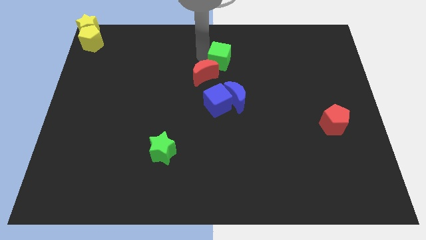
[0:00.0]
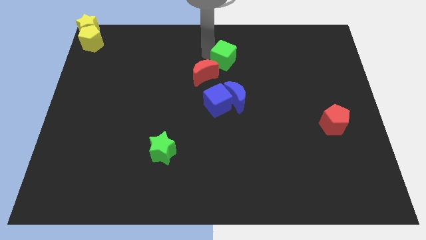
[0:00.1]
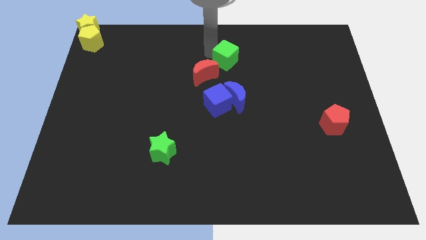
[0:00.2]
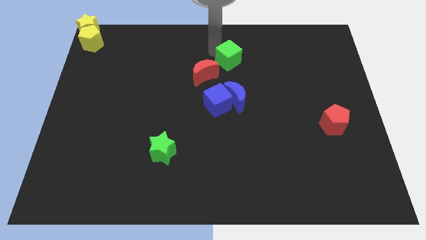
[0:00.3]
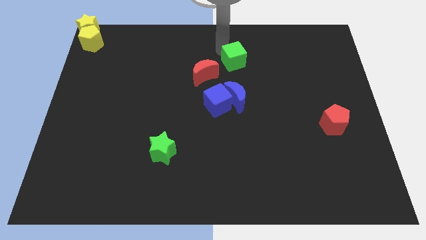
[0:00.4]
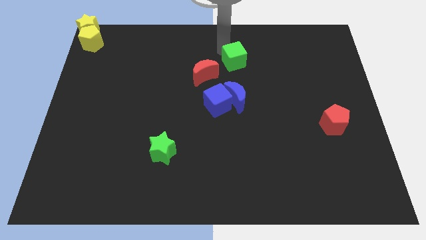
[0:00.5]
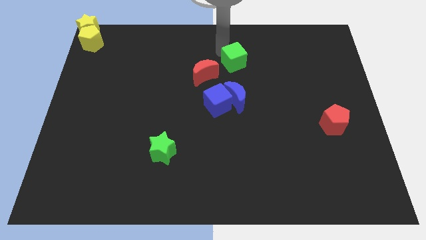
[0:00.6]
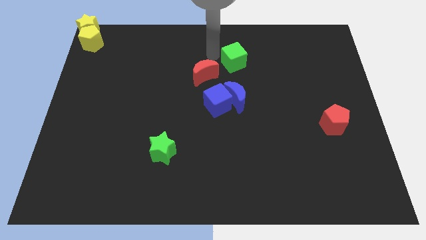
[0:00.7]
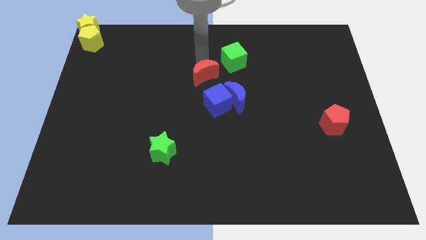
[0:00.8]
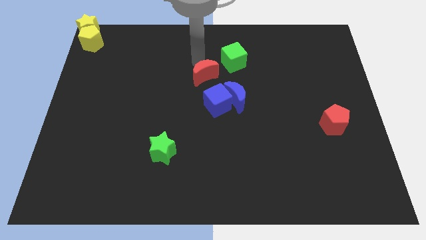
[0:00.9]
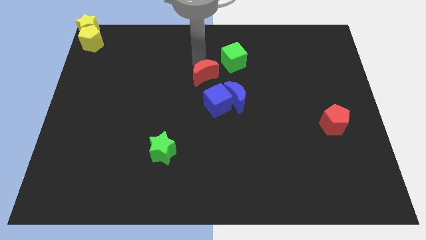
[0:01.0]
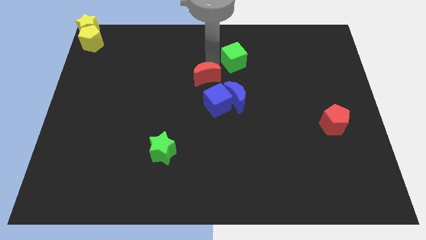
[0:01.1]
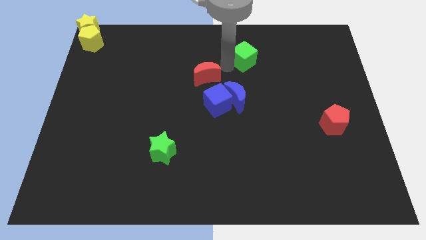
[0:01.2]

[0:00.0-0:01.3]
move green cube away from the red moon

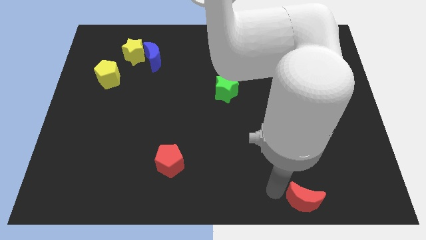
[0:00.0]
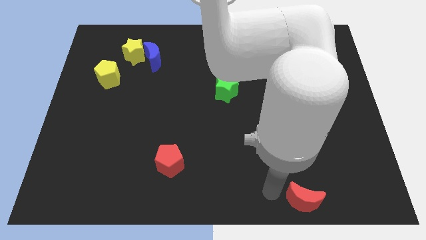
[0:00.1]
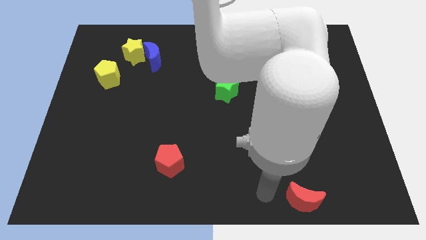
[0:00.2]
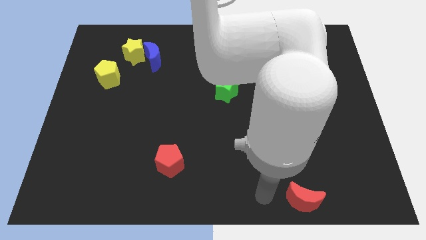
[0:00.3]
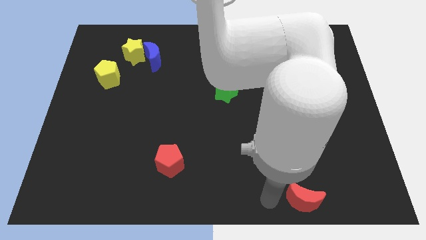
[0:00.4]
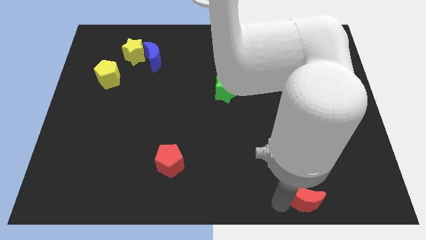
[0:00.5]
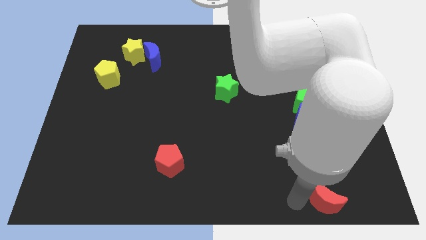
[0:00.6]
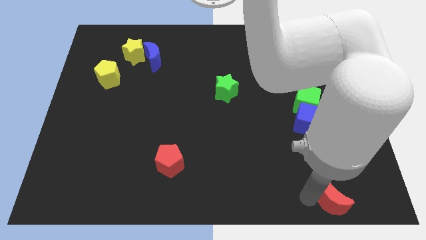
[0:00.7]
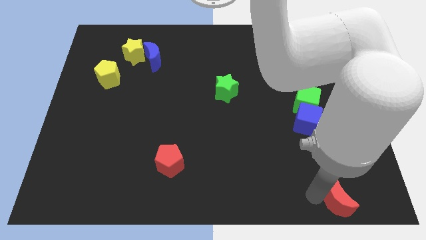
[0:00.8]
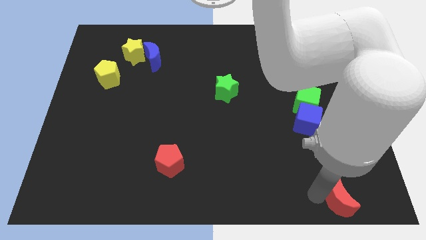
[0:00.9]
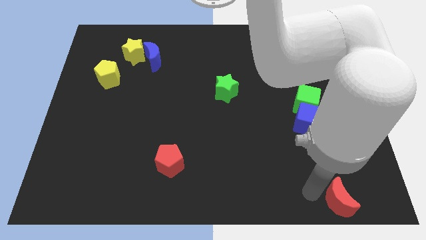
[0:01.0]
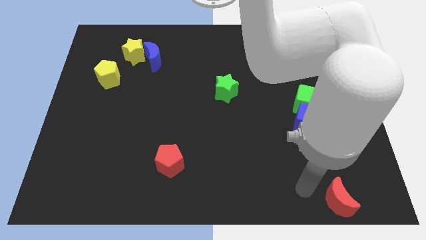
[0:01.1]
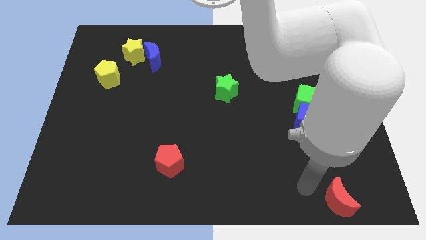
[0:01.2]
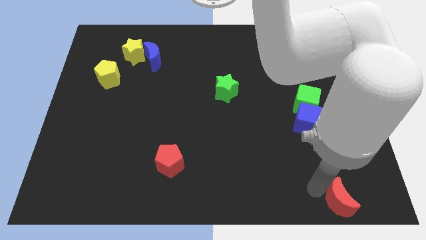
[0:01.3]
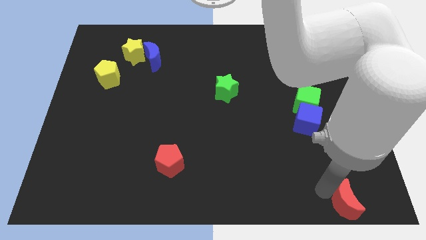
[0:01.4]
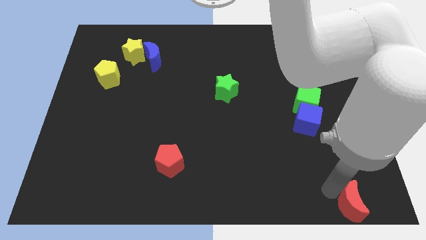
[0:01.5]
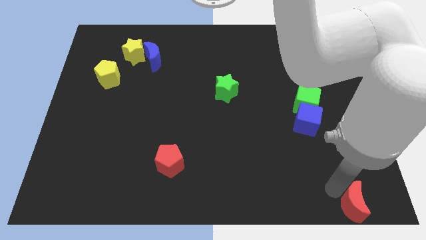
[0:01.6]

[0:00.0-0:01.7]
move the red crescent towards the bottom right corner of the board

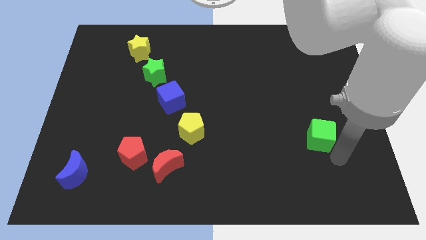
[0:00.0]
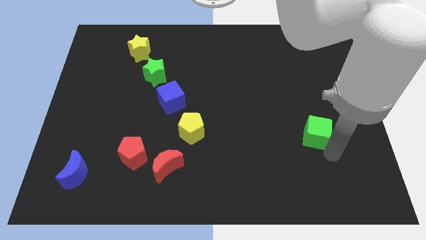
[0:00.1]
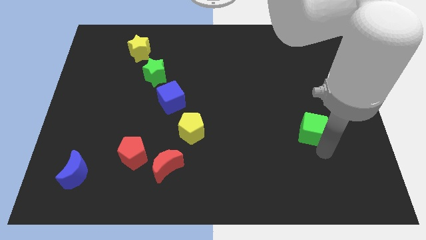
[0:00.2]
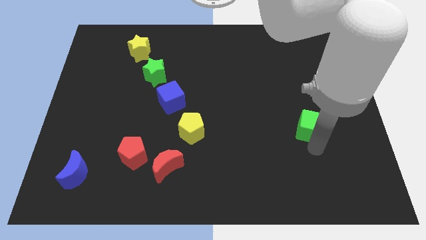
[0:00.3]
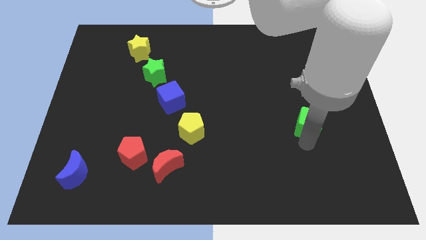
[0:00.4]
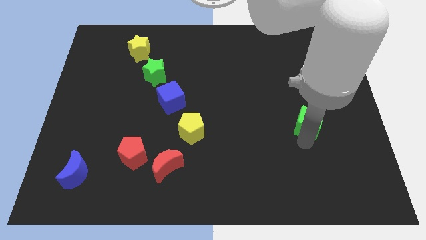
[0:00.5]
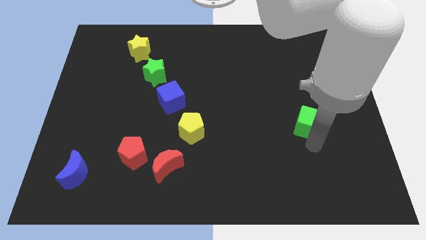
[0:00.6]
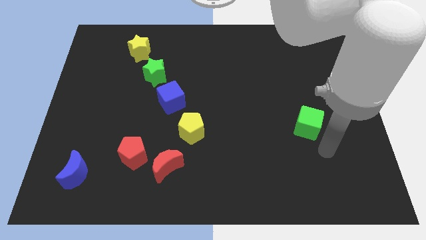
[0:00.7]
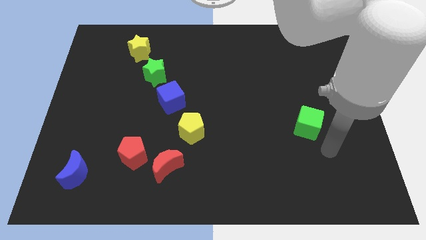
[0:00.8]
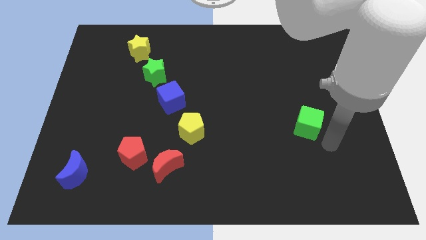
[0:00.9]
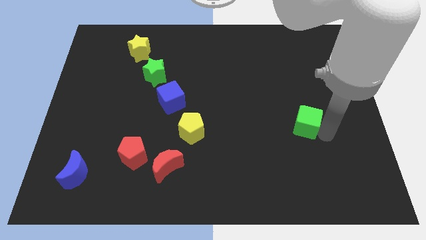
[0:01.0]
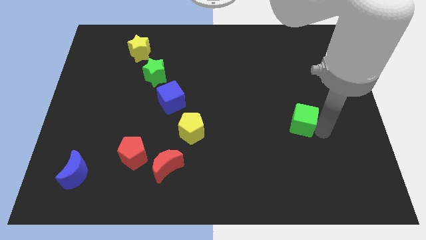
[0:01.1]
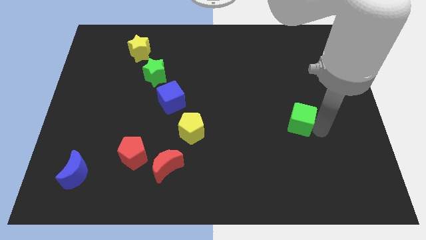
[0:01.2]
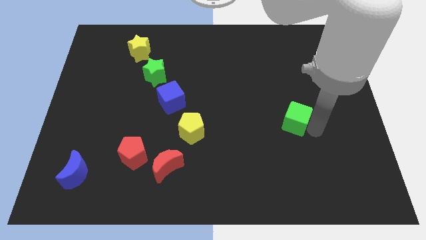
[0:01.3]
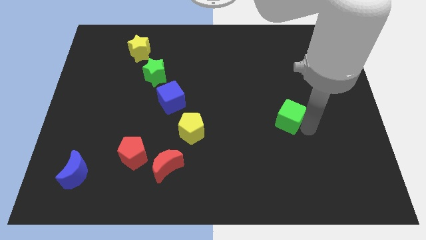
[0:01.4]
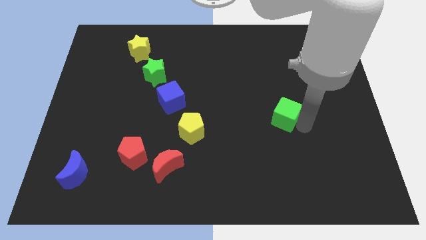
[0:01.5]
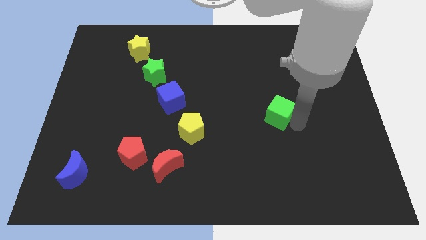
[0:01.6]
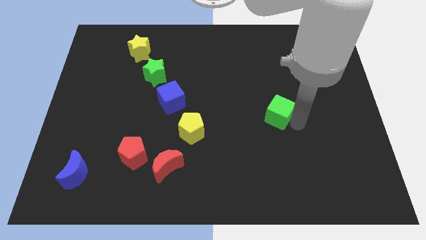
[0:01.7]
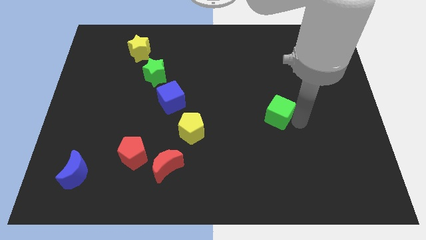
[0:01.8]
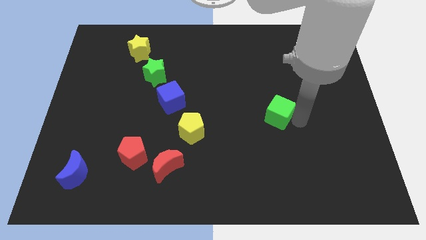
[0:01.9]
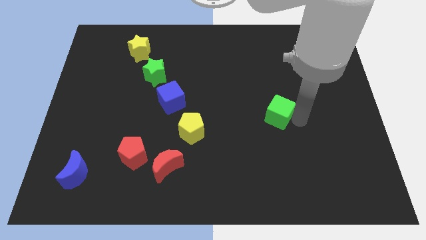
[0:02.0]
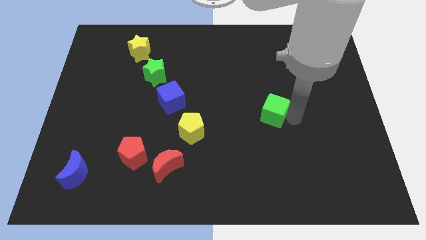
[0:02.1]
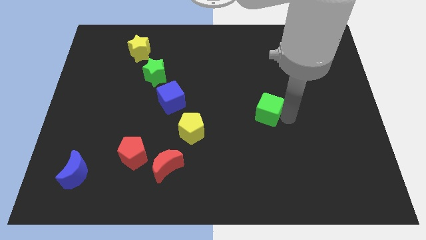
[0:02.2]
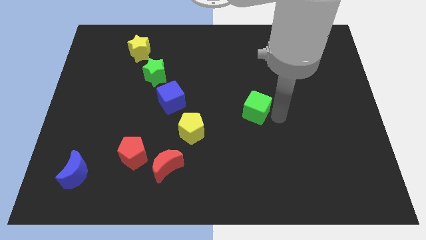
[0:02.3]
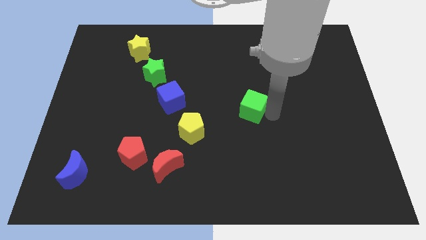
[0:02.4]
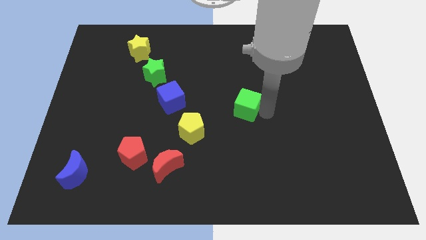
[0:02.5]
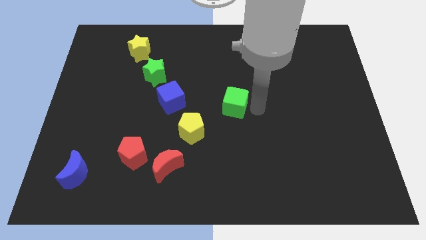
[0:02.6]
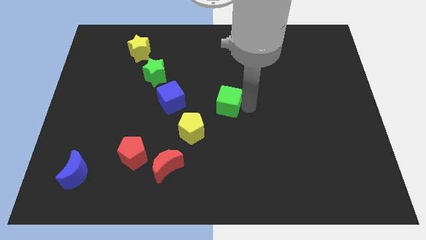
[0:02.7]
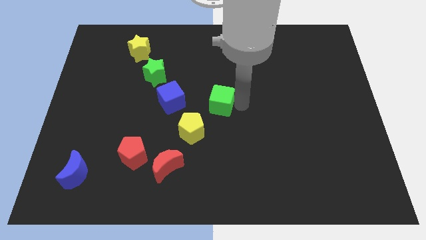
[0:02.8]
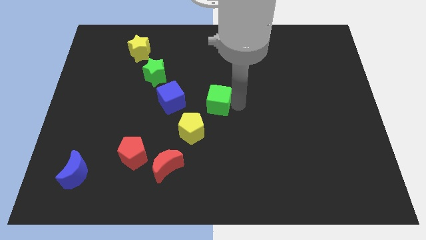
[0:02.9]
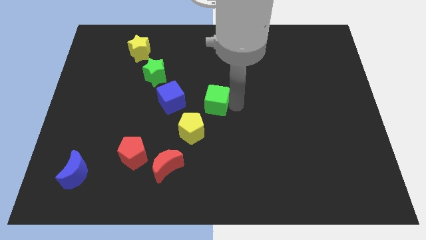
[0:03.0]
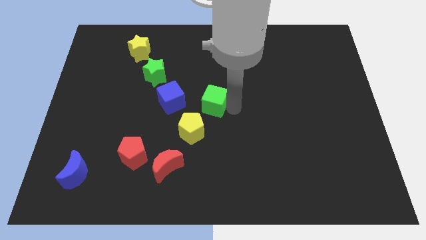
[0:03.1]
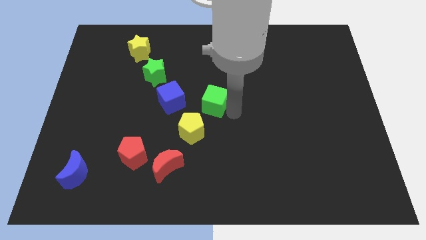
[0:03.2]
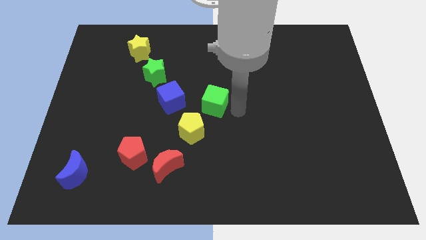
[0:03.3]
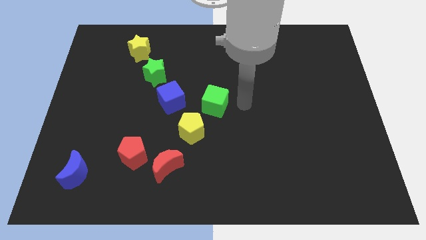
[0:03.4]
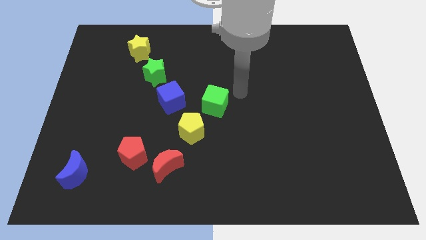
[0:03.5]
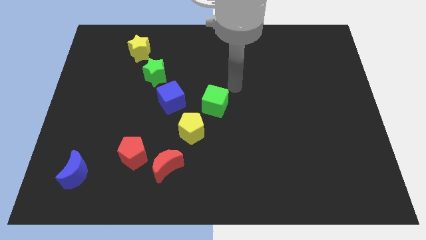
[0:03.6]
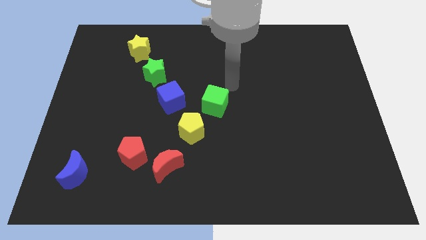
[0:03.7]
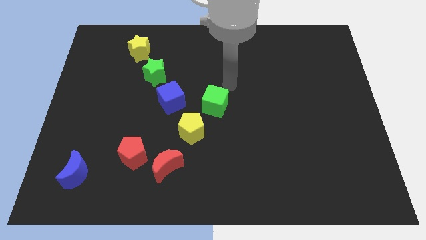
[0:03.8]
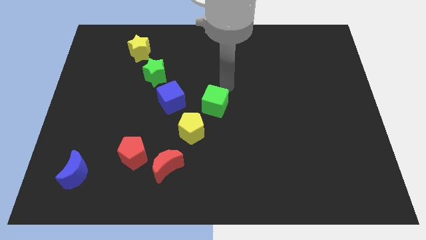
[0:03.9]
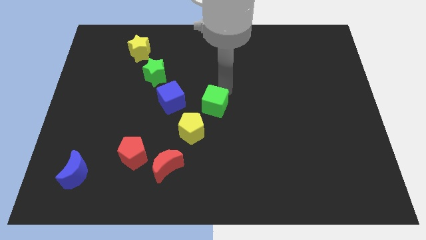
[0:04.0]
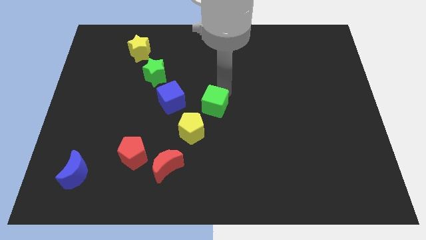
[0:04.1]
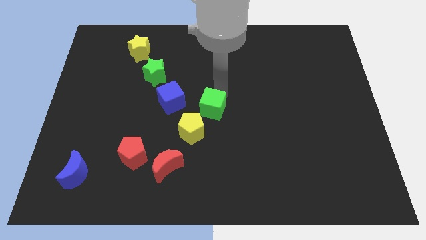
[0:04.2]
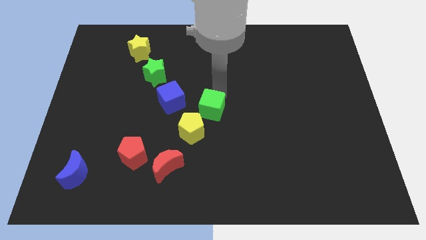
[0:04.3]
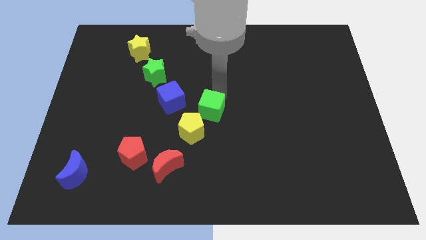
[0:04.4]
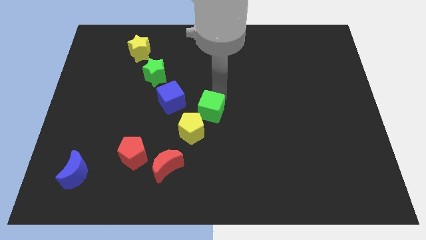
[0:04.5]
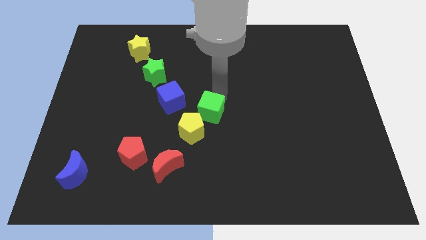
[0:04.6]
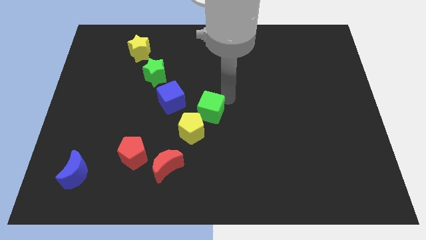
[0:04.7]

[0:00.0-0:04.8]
move the green cube close to yellow pentagon

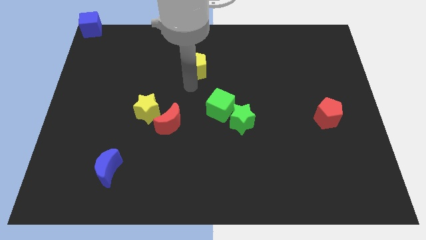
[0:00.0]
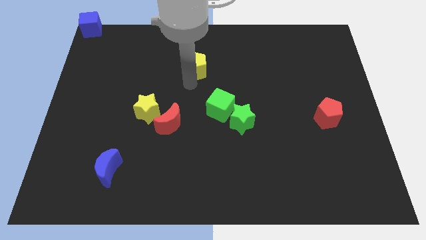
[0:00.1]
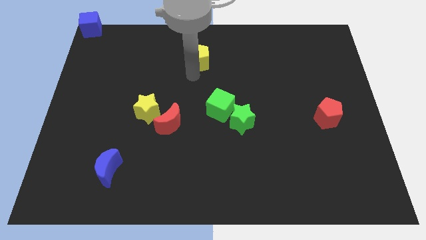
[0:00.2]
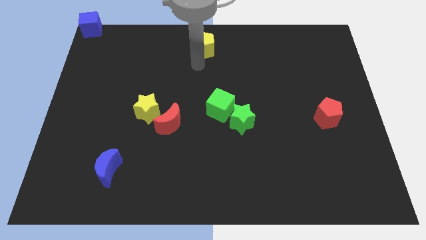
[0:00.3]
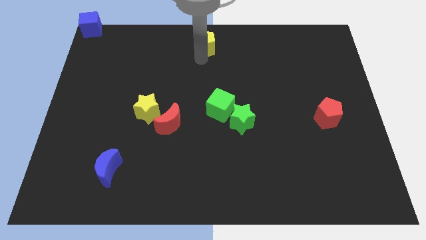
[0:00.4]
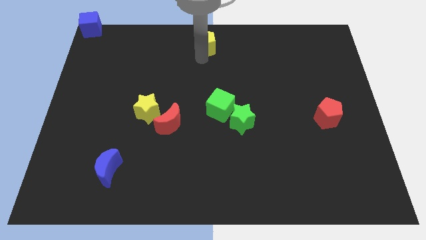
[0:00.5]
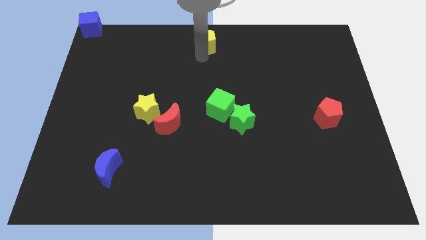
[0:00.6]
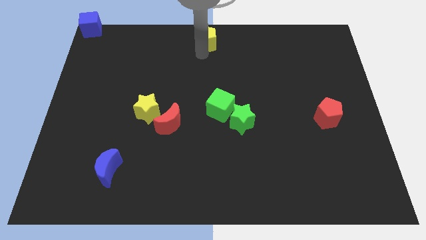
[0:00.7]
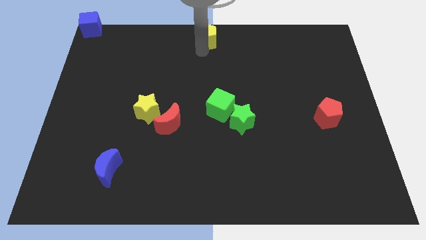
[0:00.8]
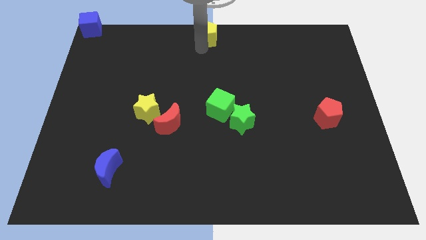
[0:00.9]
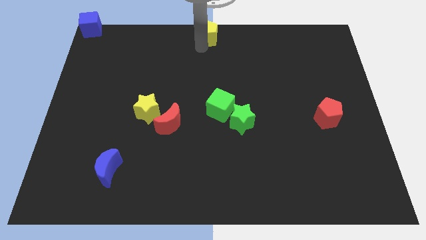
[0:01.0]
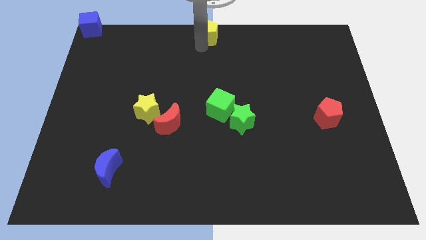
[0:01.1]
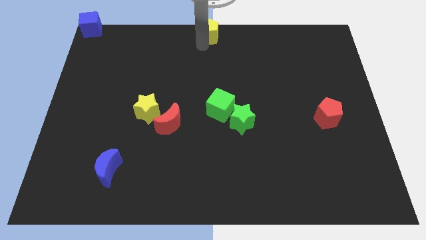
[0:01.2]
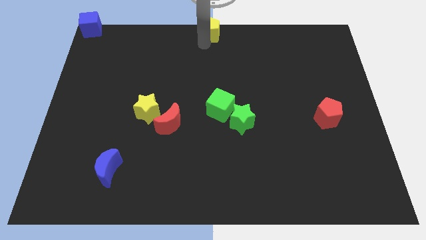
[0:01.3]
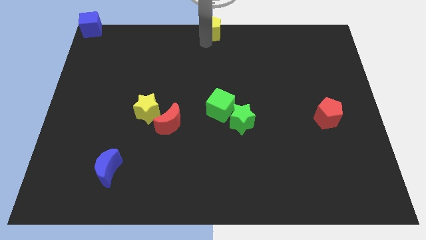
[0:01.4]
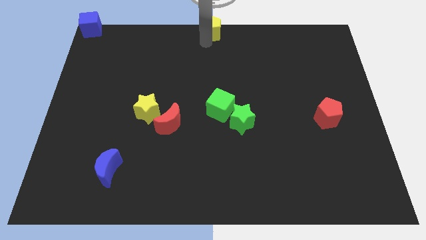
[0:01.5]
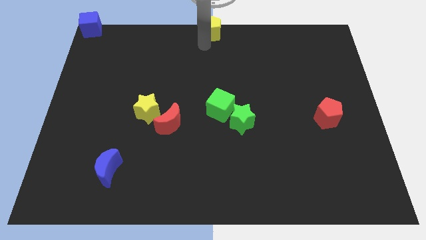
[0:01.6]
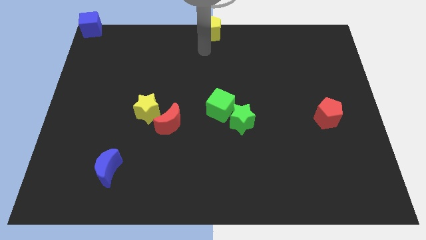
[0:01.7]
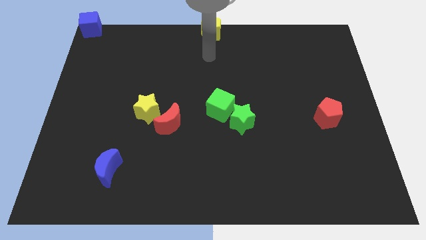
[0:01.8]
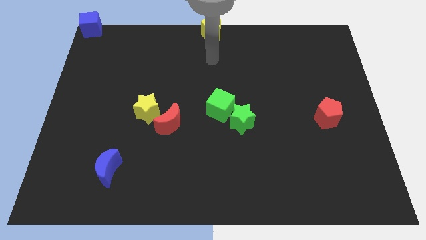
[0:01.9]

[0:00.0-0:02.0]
push the yellow pentagon to the top center of the board
